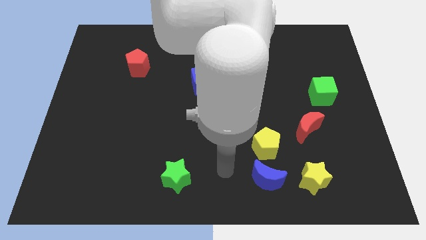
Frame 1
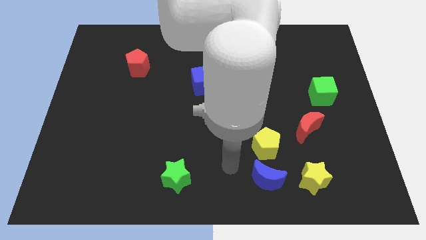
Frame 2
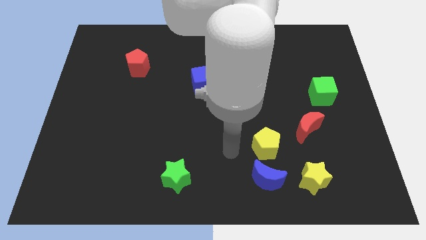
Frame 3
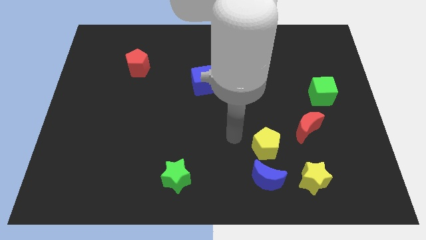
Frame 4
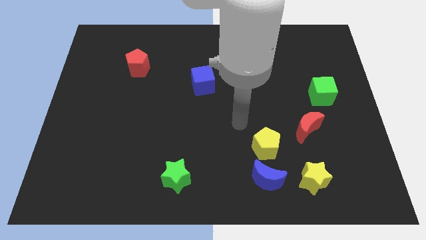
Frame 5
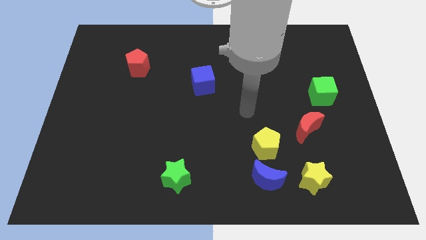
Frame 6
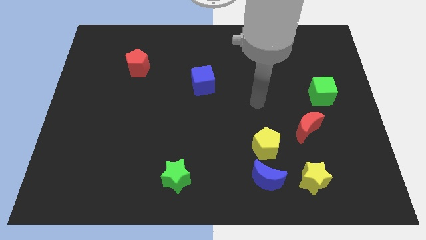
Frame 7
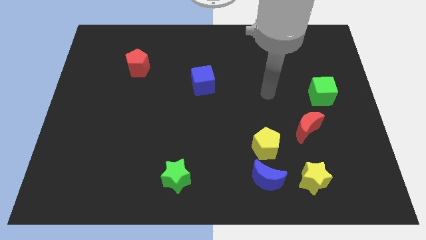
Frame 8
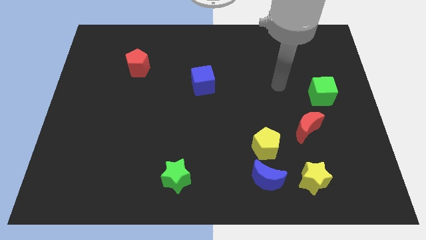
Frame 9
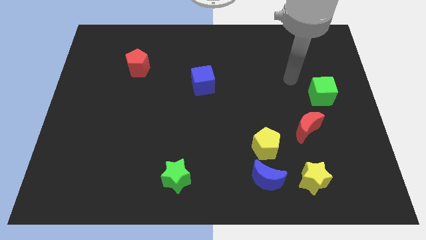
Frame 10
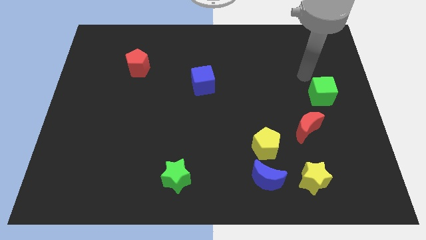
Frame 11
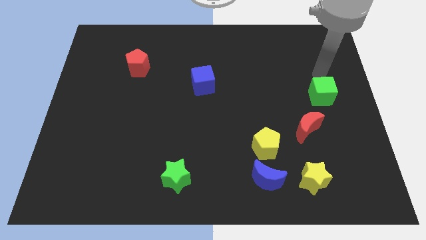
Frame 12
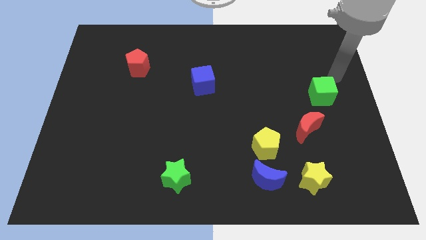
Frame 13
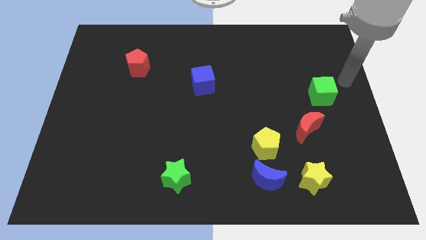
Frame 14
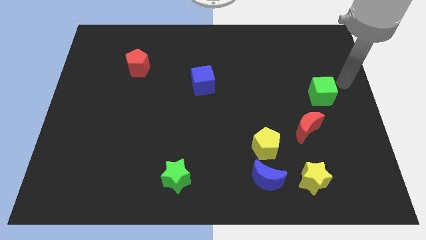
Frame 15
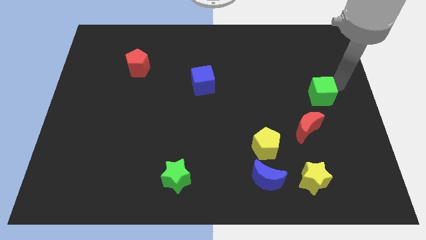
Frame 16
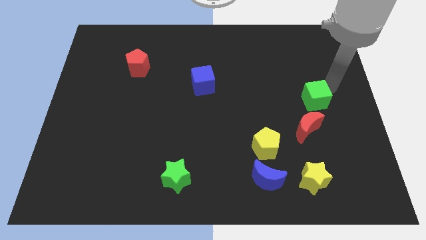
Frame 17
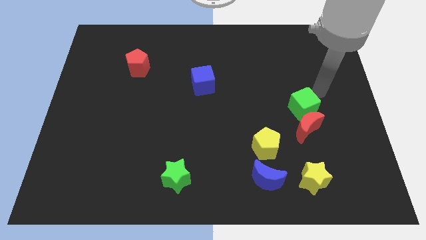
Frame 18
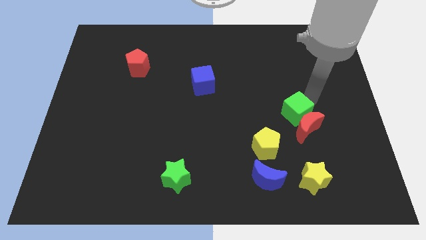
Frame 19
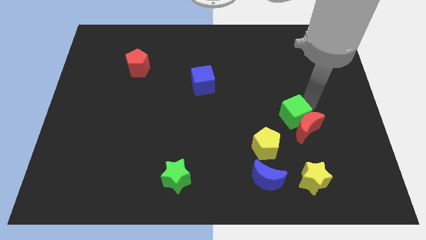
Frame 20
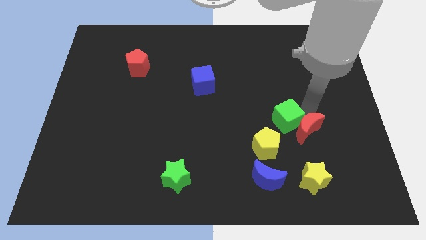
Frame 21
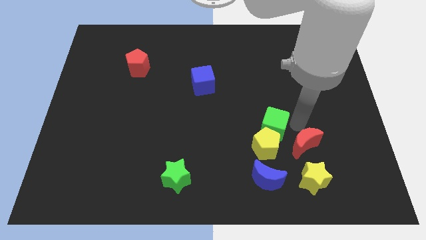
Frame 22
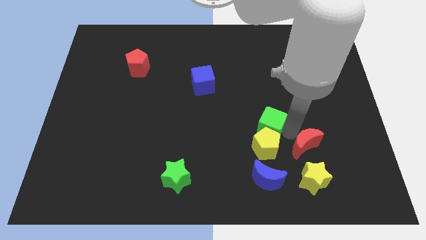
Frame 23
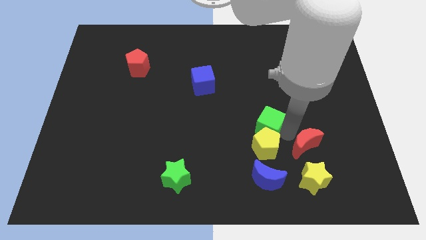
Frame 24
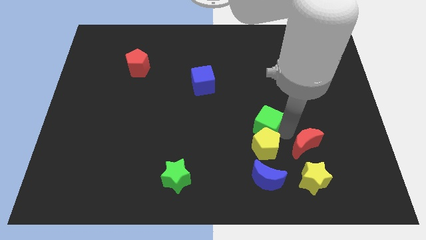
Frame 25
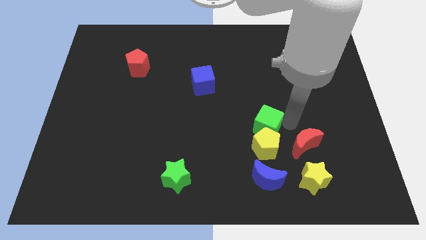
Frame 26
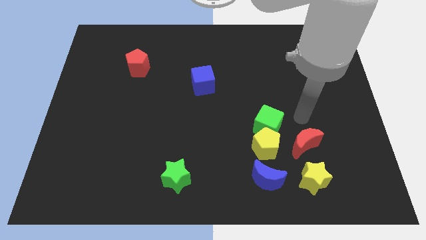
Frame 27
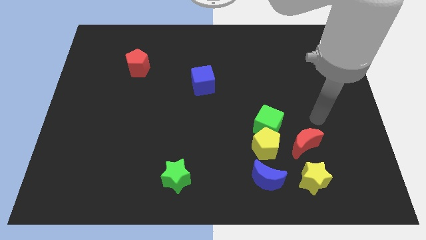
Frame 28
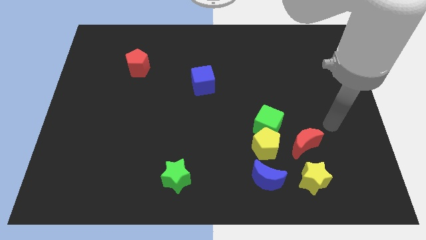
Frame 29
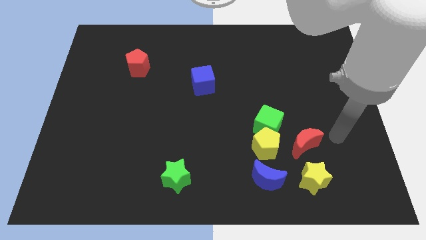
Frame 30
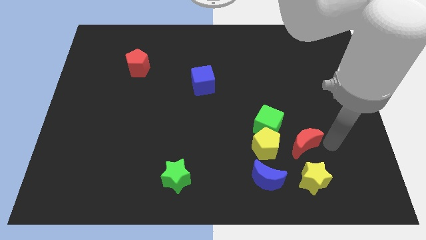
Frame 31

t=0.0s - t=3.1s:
place the green cube to the top side of the yellow pentagon

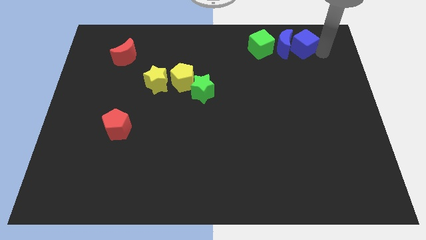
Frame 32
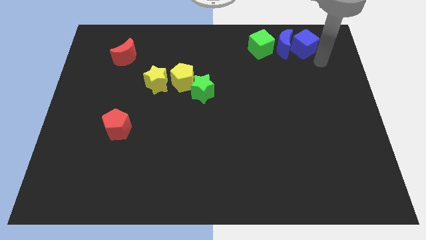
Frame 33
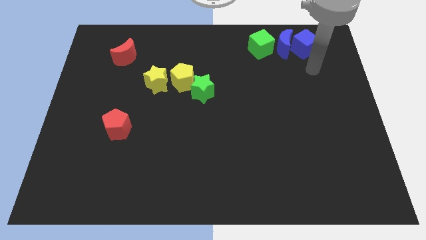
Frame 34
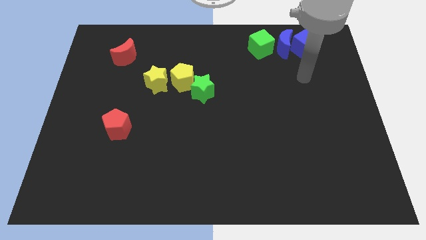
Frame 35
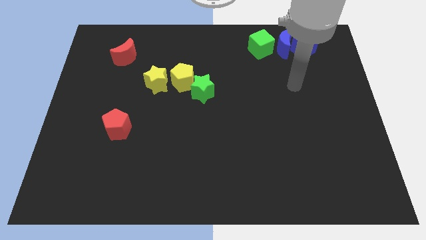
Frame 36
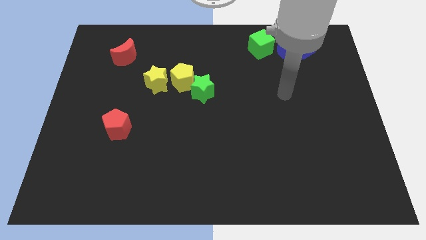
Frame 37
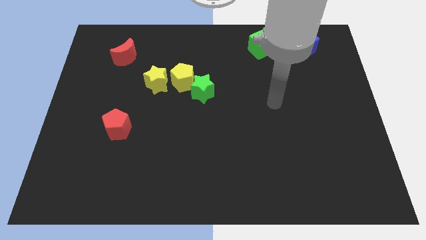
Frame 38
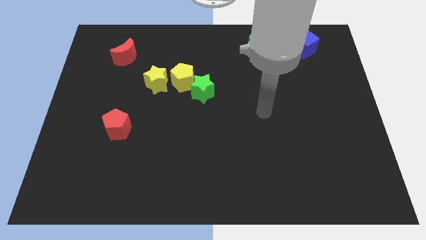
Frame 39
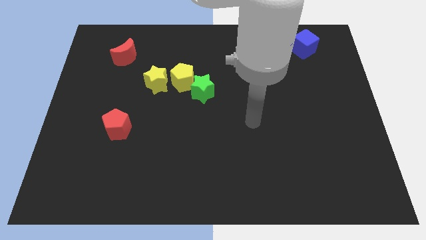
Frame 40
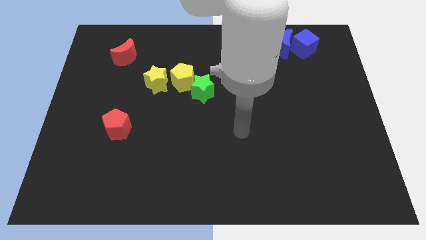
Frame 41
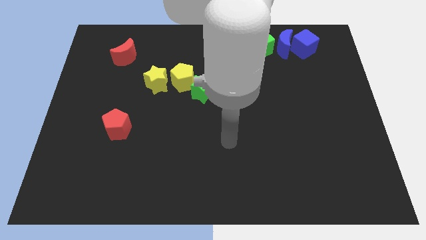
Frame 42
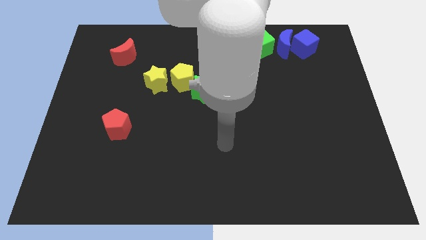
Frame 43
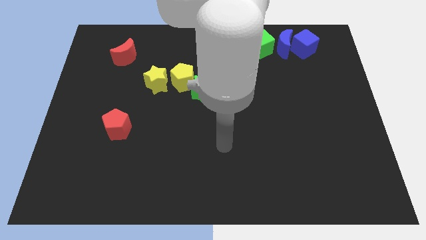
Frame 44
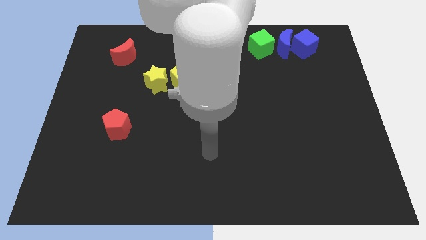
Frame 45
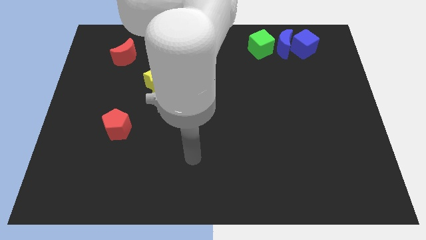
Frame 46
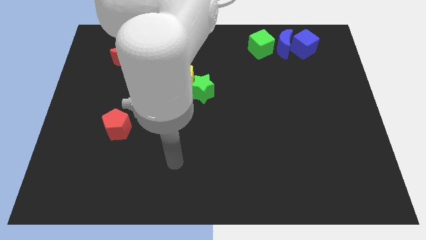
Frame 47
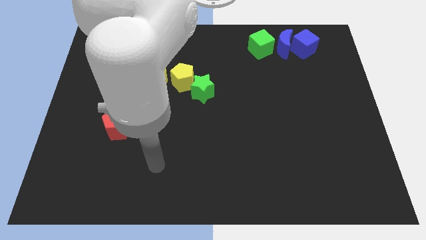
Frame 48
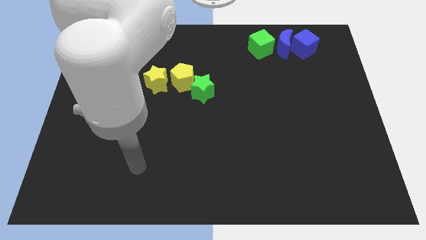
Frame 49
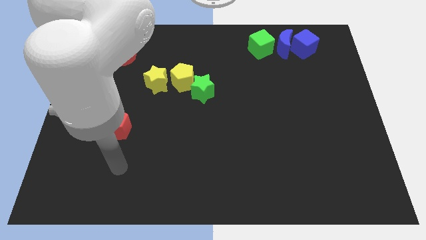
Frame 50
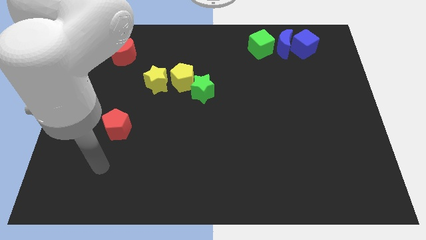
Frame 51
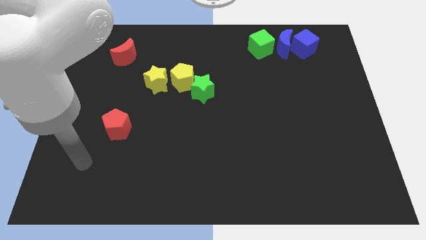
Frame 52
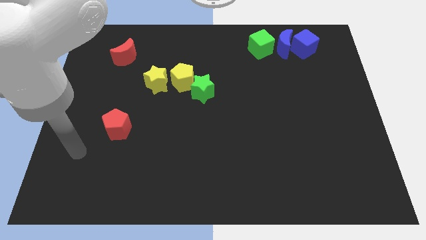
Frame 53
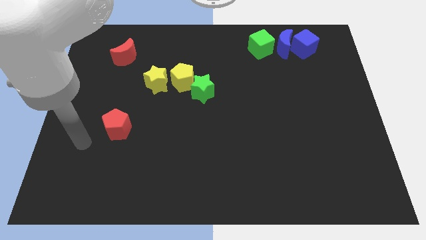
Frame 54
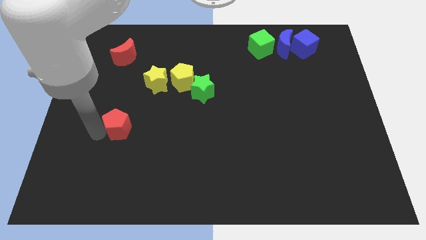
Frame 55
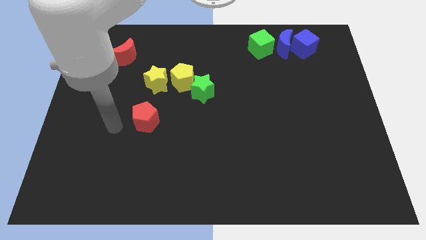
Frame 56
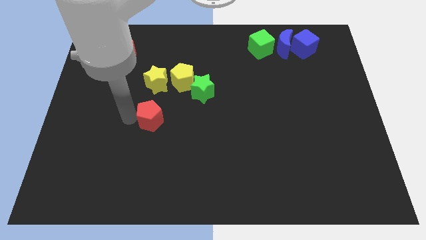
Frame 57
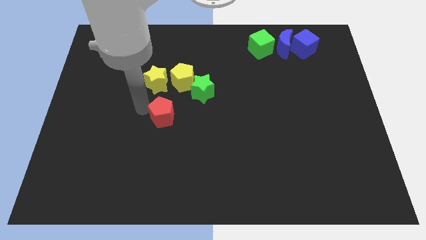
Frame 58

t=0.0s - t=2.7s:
move the red pentagon to the bottom of the yellow star

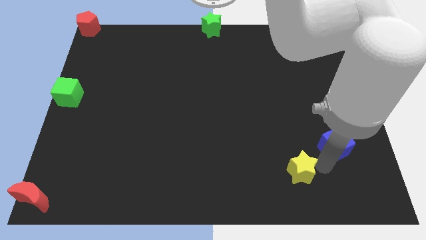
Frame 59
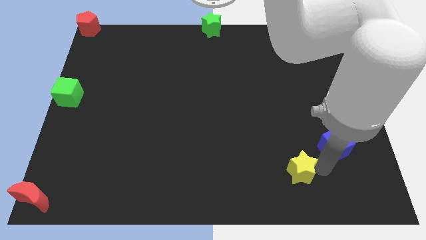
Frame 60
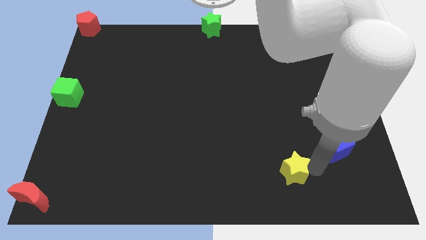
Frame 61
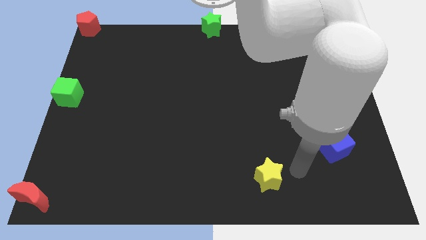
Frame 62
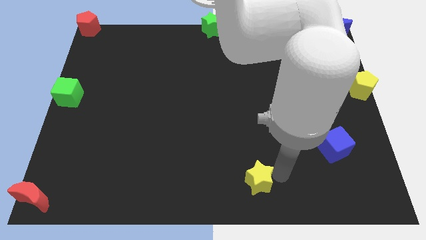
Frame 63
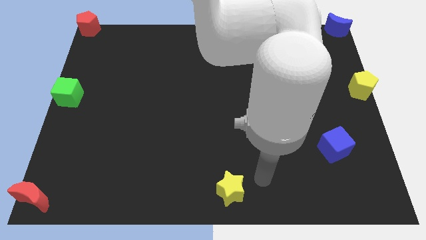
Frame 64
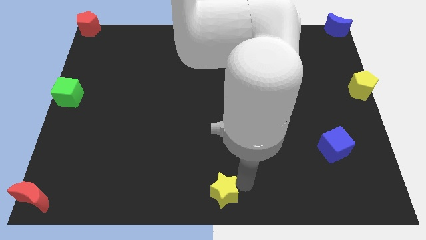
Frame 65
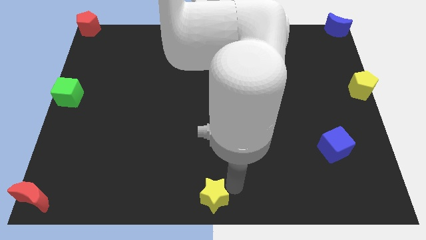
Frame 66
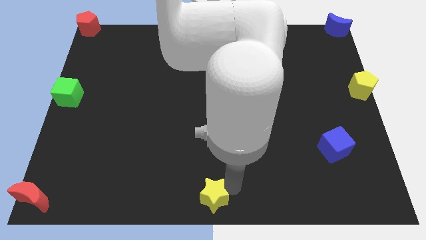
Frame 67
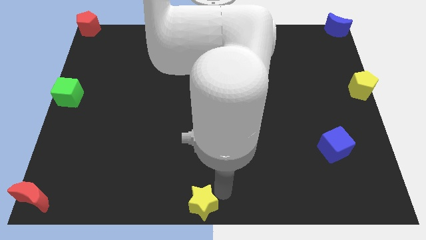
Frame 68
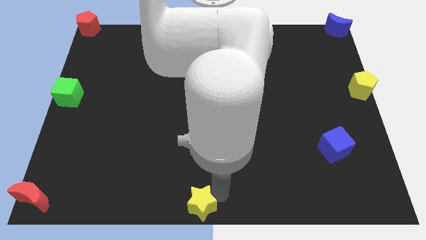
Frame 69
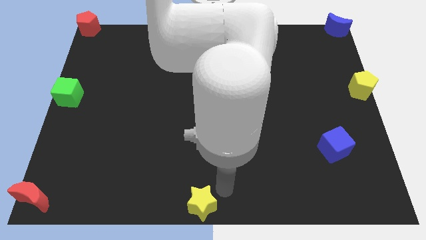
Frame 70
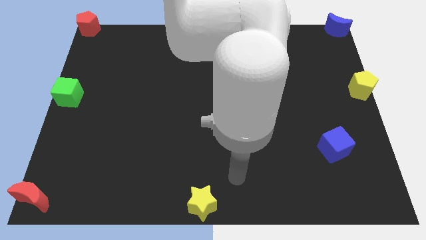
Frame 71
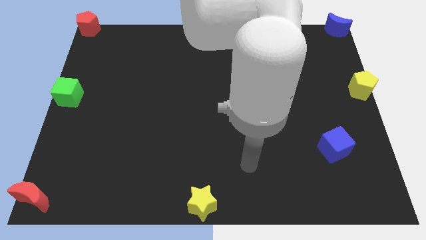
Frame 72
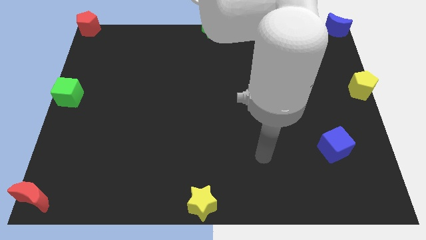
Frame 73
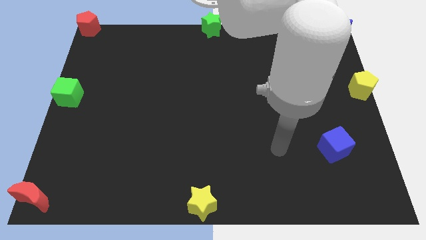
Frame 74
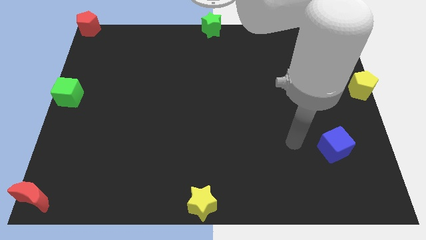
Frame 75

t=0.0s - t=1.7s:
push the yellow star to the bottom center

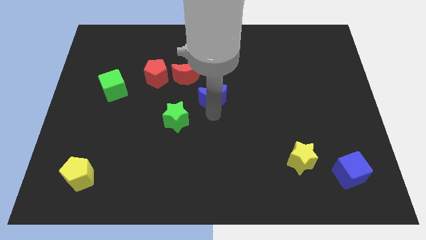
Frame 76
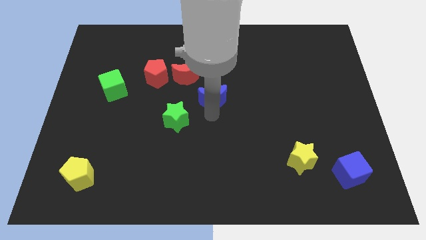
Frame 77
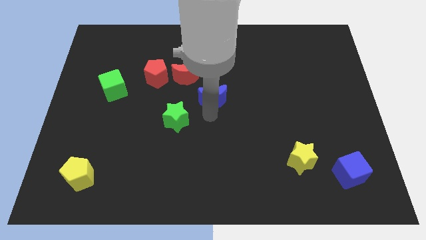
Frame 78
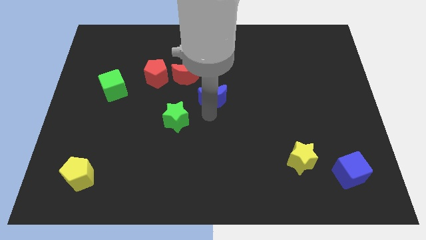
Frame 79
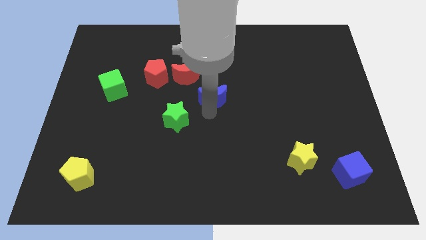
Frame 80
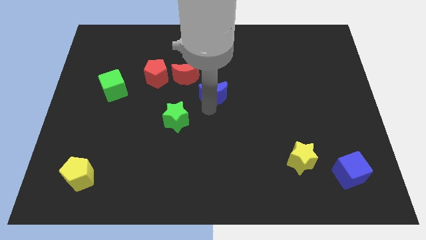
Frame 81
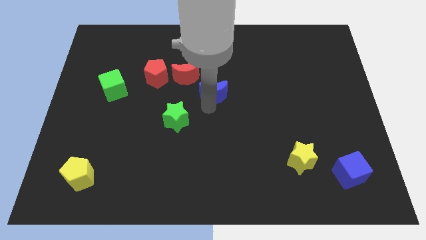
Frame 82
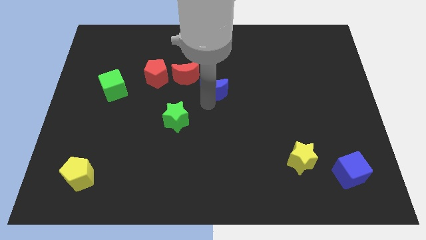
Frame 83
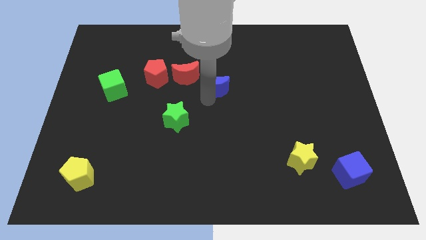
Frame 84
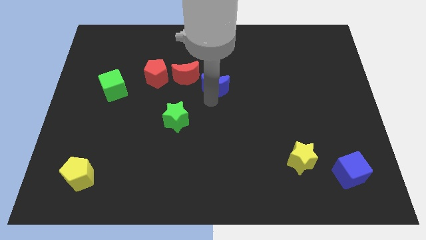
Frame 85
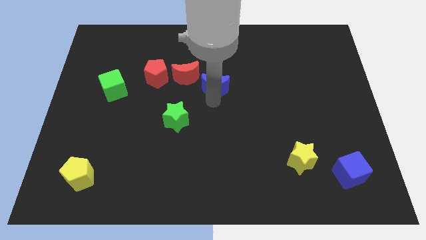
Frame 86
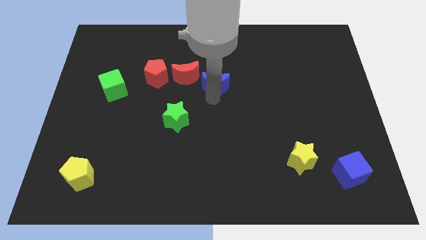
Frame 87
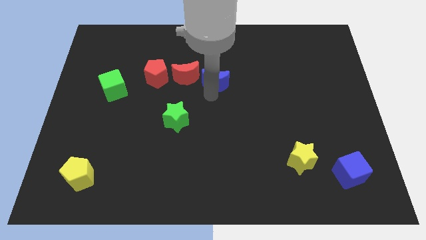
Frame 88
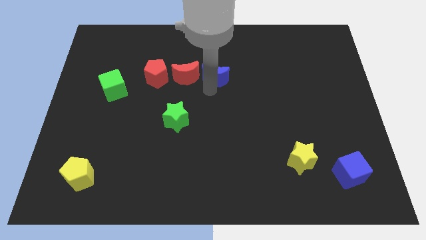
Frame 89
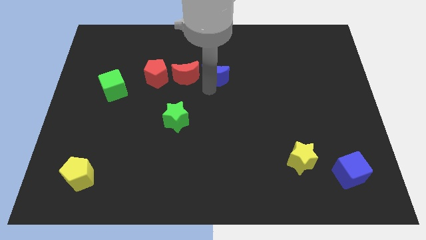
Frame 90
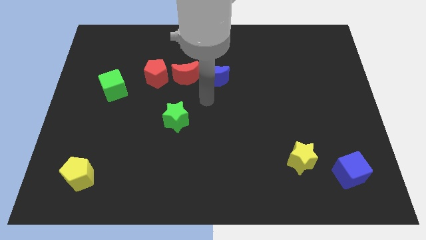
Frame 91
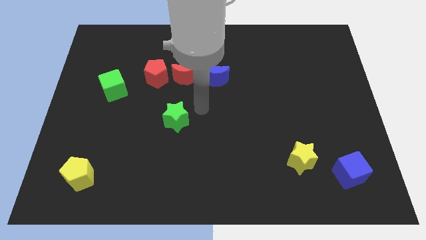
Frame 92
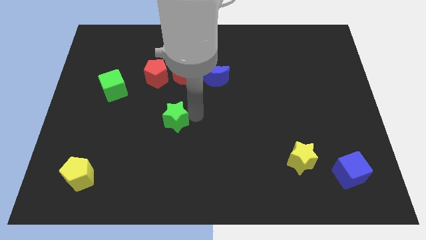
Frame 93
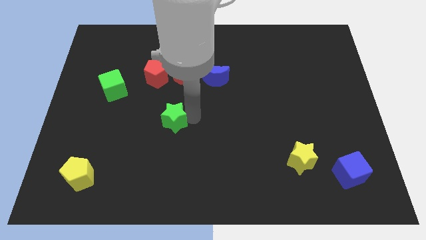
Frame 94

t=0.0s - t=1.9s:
move the blue moon left to the red moon
